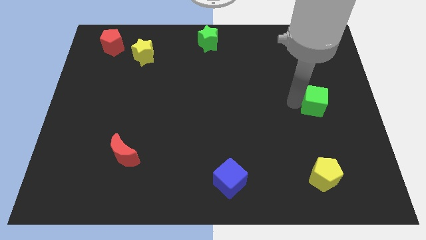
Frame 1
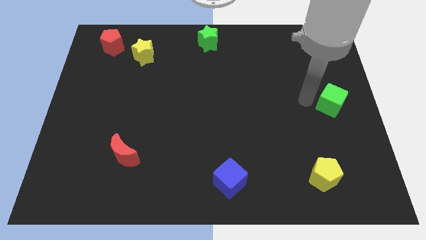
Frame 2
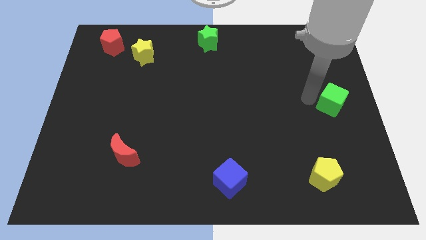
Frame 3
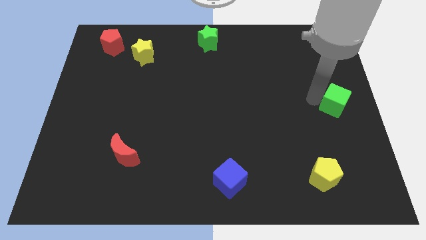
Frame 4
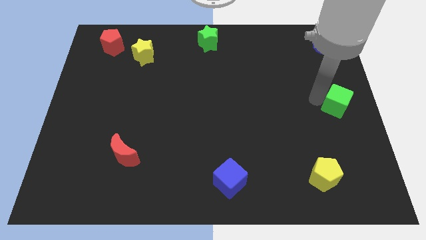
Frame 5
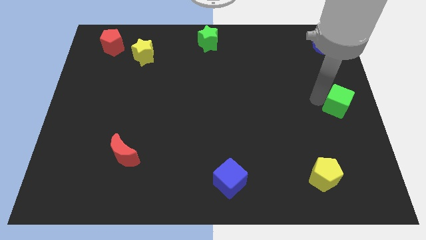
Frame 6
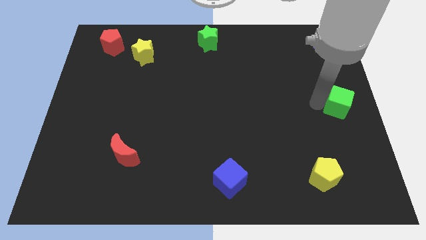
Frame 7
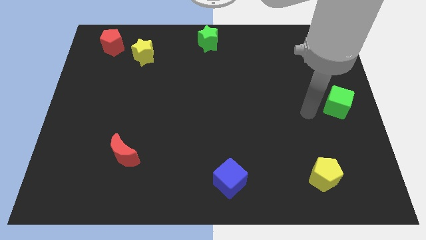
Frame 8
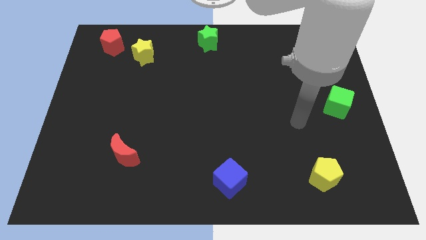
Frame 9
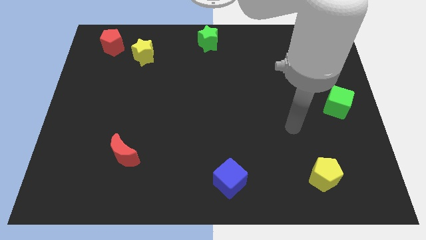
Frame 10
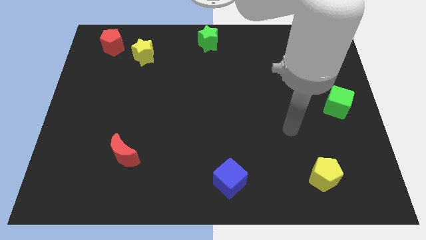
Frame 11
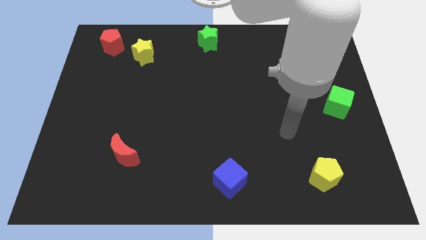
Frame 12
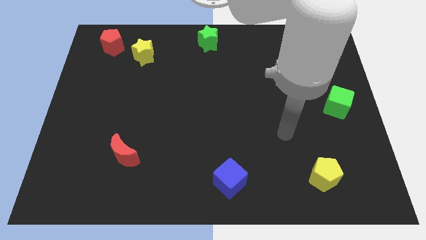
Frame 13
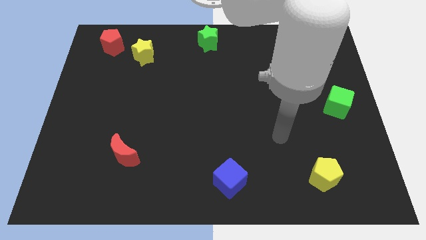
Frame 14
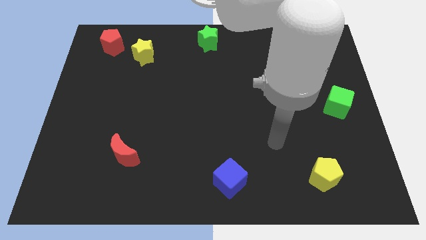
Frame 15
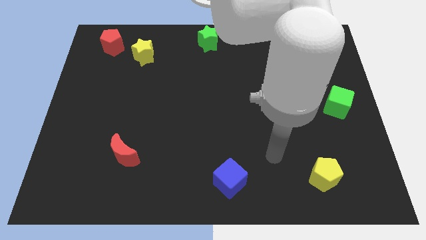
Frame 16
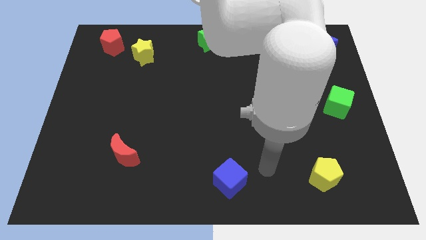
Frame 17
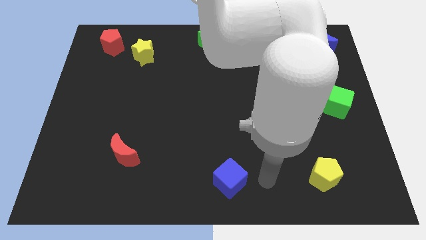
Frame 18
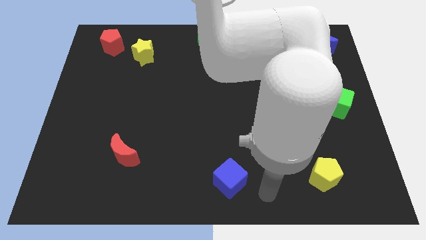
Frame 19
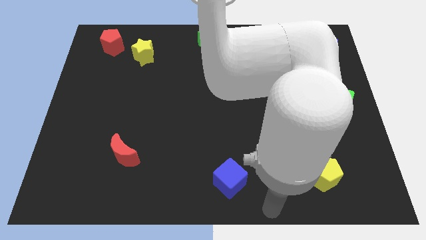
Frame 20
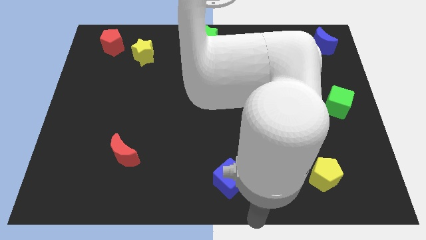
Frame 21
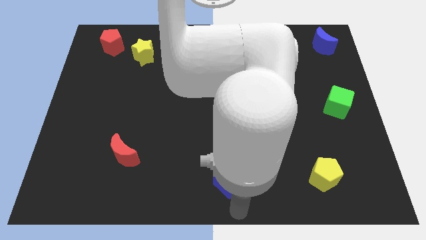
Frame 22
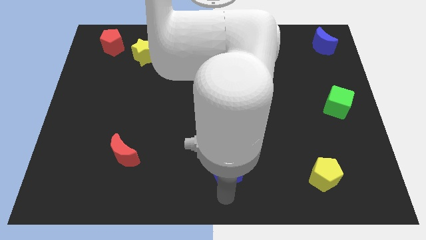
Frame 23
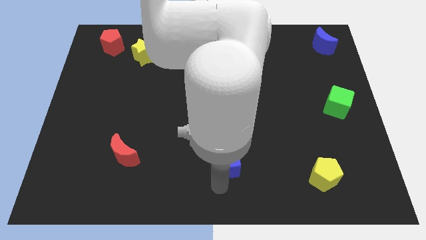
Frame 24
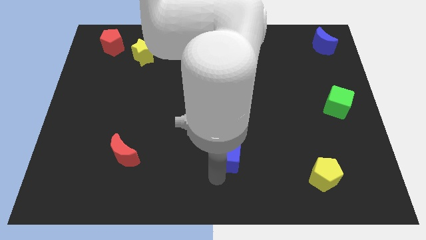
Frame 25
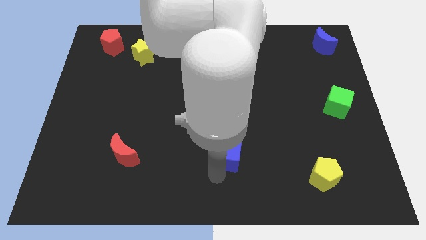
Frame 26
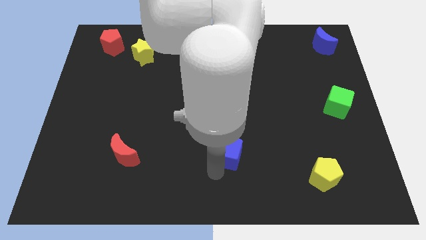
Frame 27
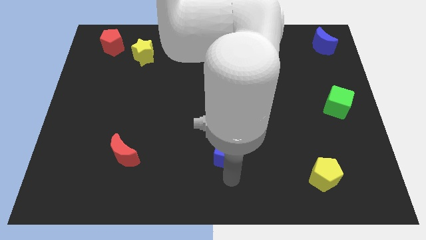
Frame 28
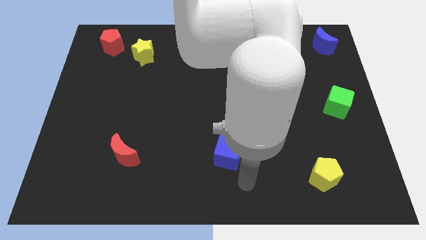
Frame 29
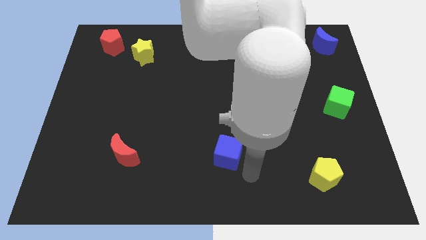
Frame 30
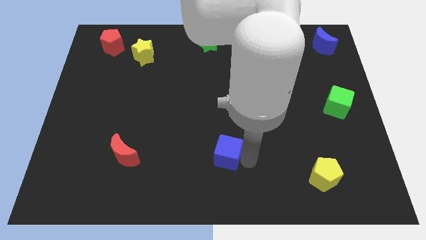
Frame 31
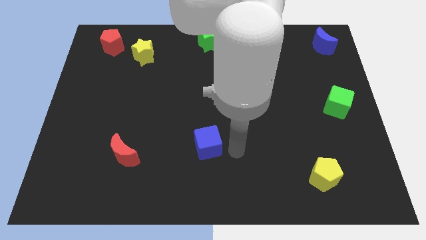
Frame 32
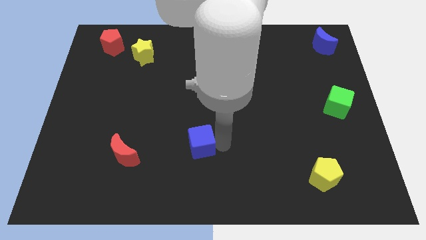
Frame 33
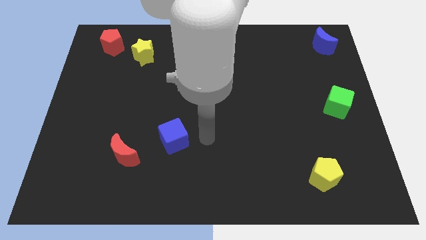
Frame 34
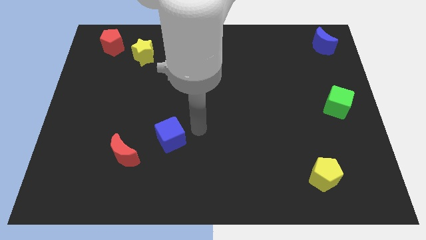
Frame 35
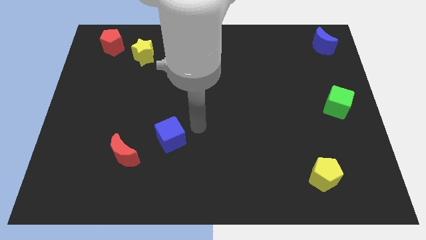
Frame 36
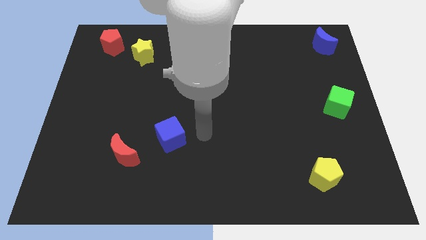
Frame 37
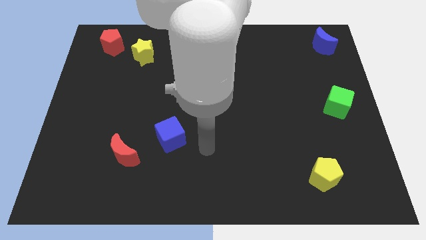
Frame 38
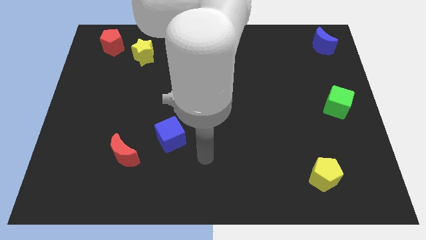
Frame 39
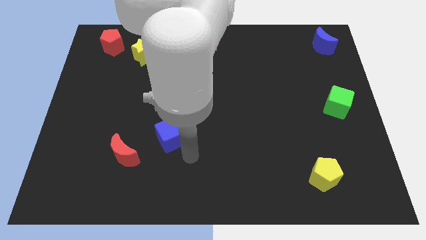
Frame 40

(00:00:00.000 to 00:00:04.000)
move the blue cube parallel to the red moon

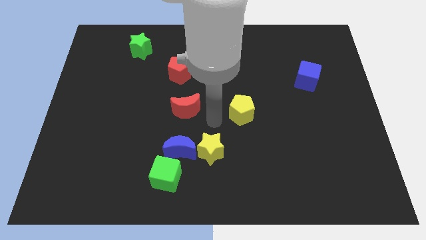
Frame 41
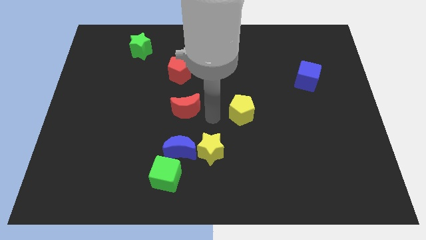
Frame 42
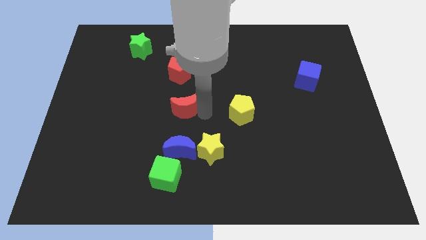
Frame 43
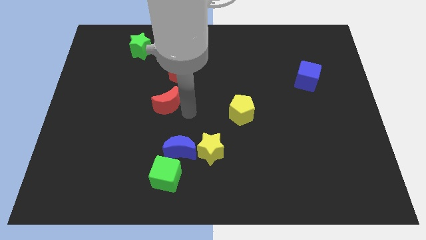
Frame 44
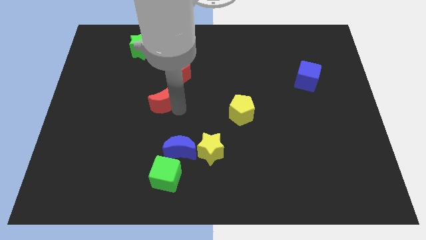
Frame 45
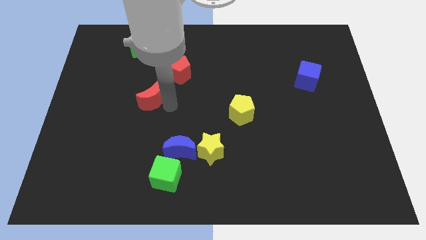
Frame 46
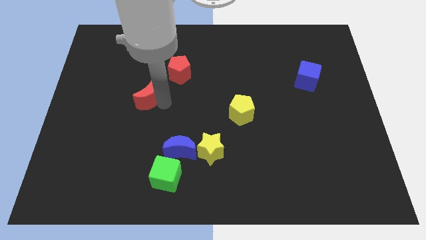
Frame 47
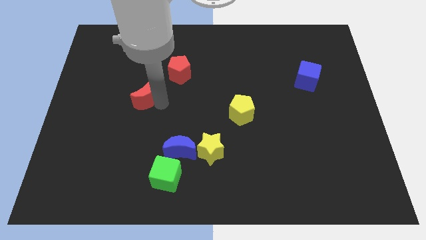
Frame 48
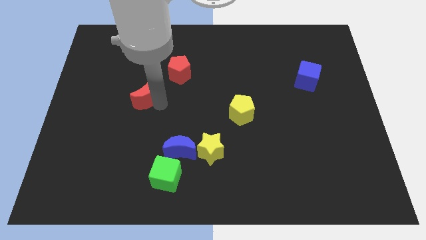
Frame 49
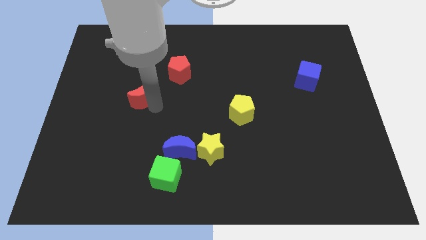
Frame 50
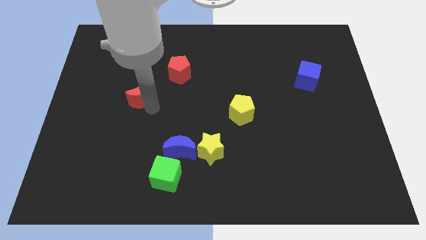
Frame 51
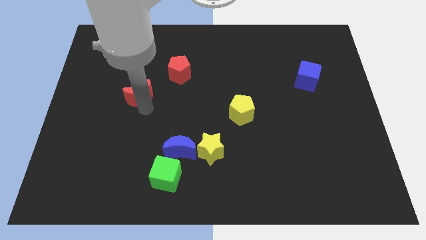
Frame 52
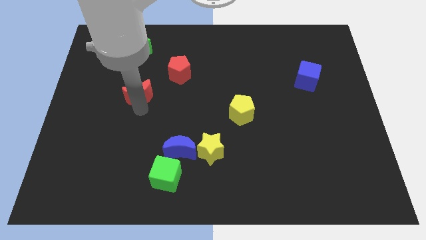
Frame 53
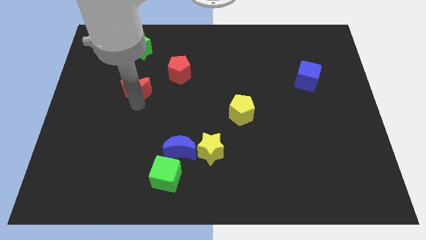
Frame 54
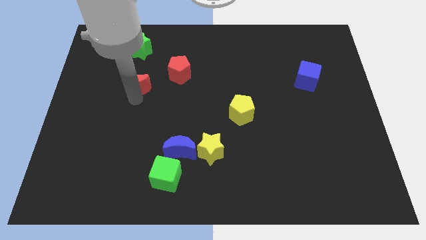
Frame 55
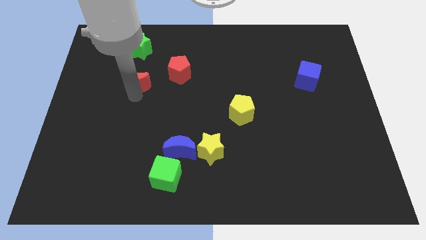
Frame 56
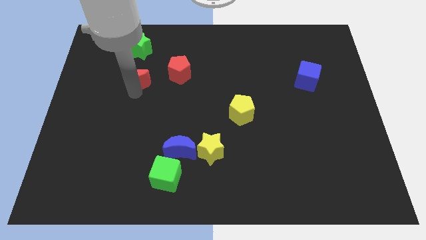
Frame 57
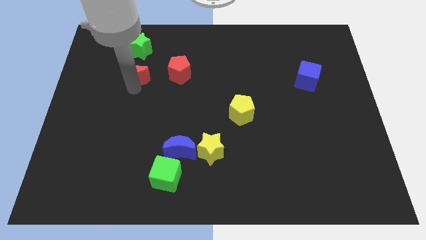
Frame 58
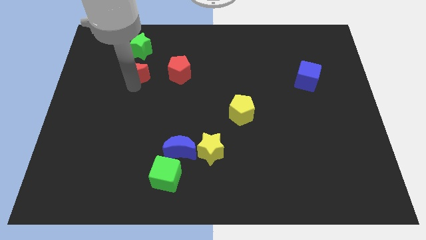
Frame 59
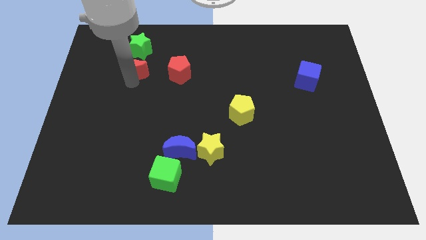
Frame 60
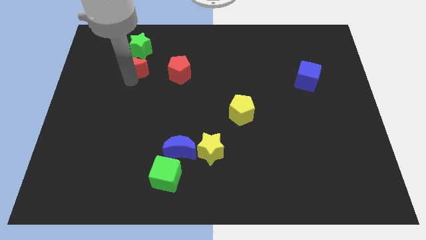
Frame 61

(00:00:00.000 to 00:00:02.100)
place the red mooon into the green star

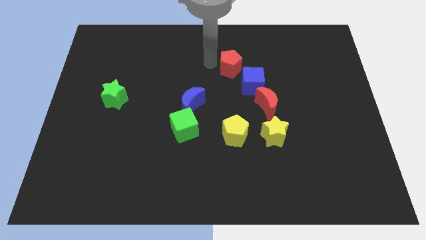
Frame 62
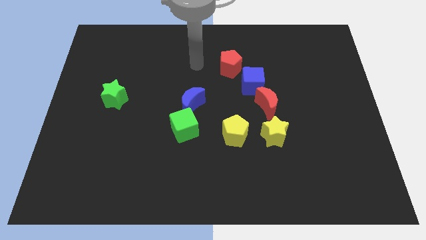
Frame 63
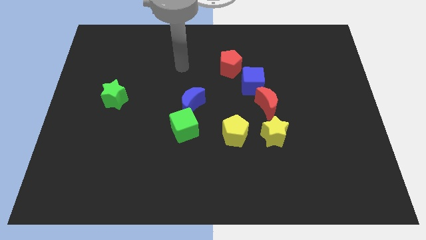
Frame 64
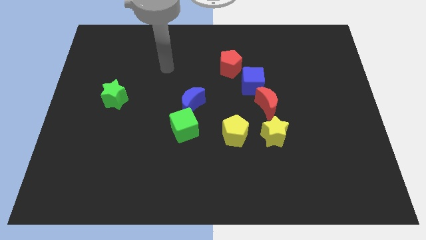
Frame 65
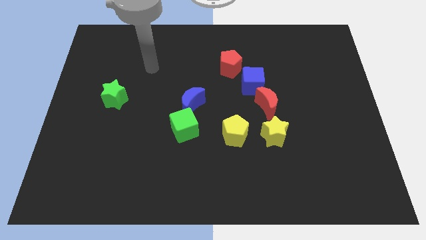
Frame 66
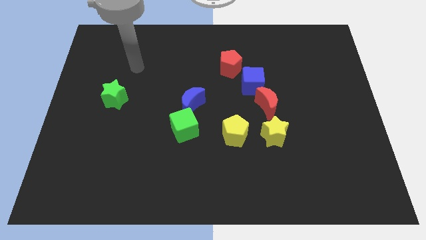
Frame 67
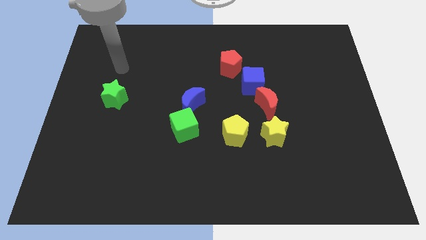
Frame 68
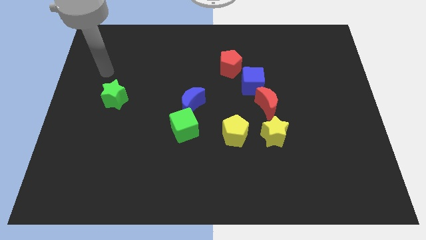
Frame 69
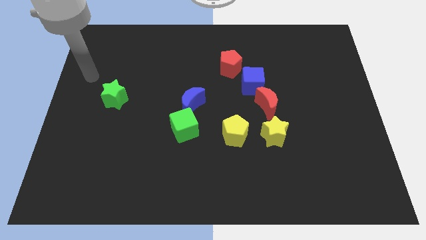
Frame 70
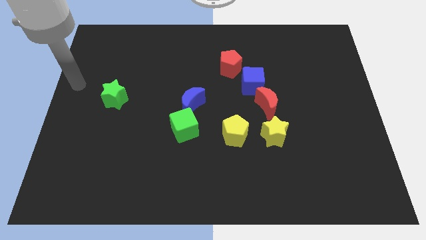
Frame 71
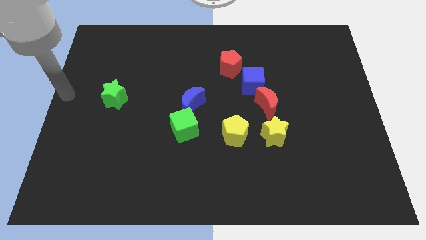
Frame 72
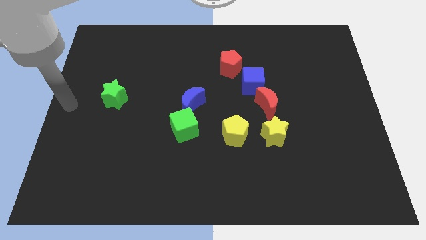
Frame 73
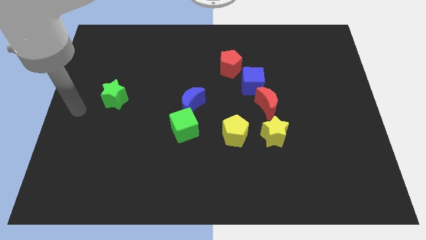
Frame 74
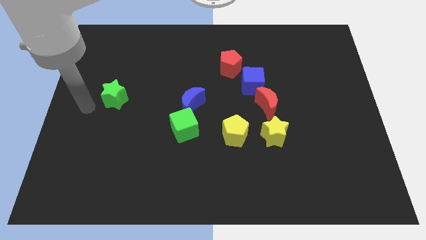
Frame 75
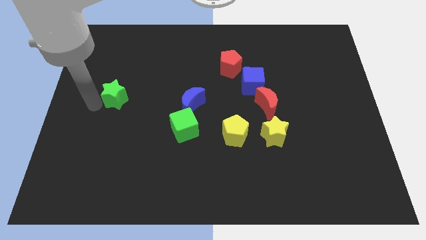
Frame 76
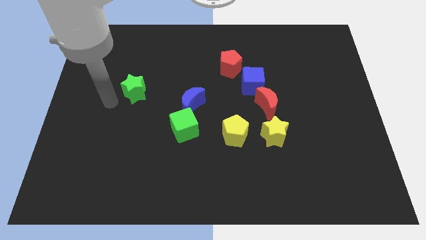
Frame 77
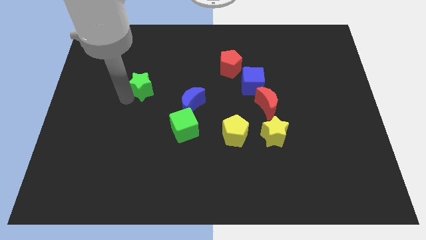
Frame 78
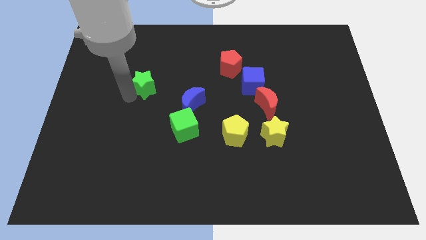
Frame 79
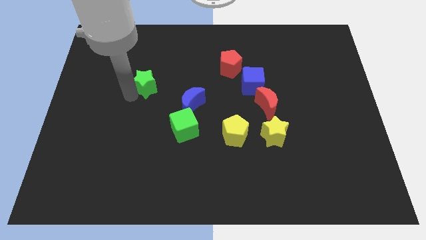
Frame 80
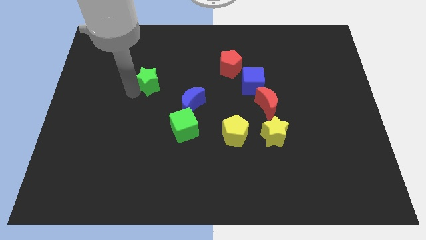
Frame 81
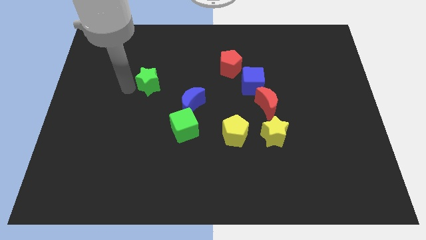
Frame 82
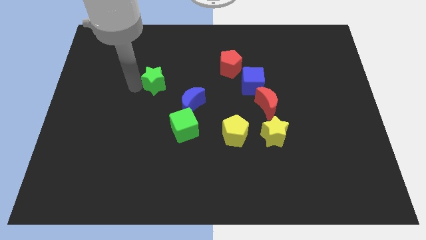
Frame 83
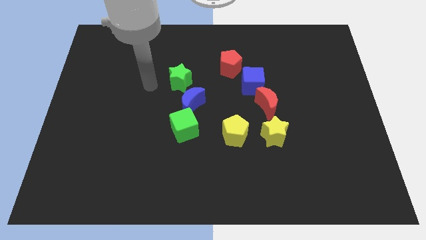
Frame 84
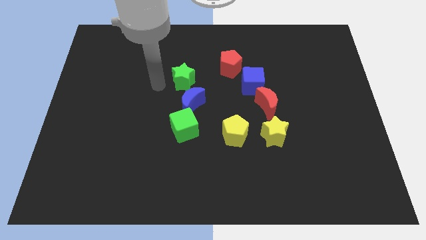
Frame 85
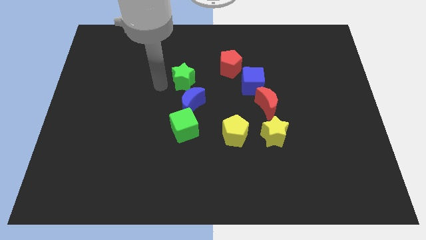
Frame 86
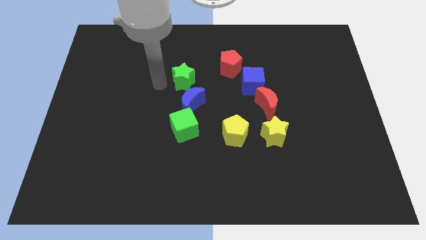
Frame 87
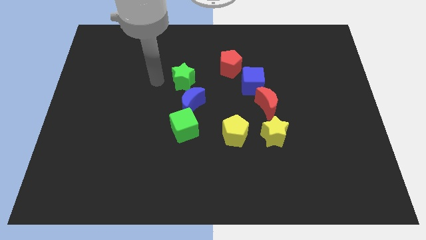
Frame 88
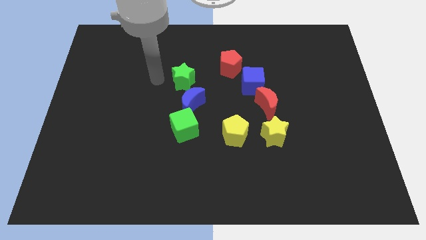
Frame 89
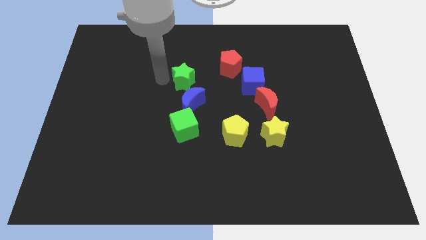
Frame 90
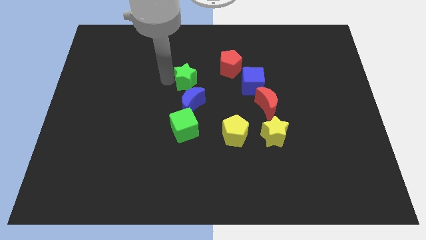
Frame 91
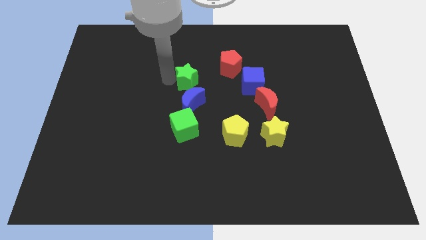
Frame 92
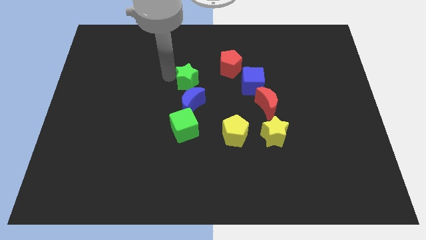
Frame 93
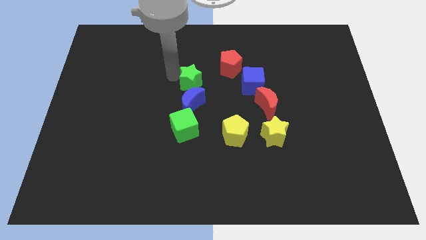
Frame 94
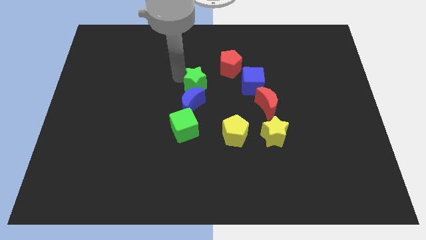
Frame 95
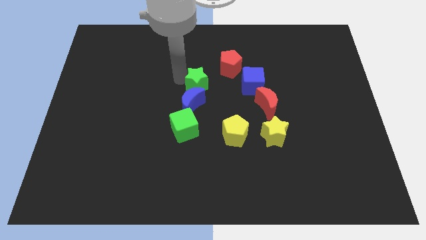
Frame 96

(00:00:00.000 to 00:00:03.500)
move the green star into the blue crescent
